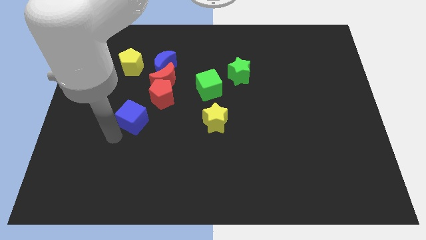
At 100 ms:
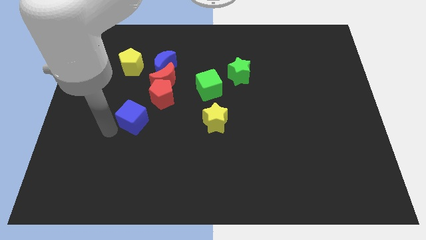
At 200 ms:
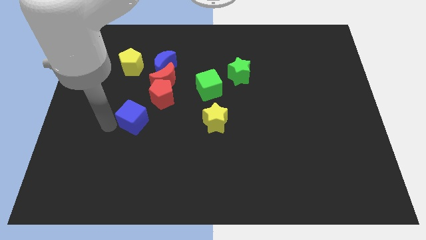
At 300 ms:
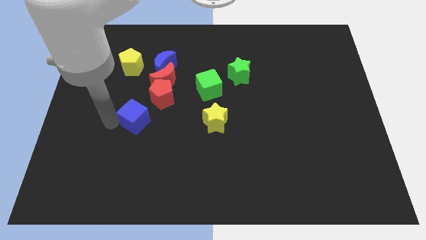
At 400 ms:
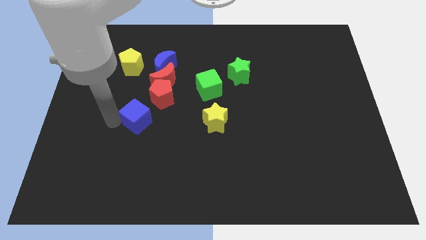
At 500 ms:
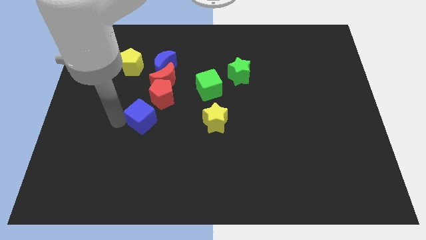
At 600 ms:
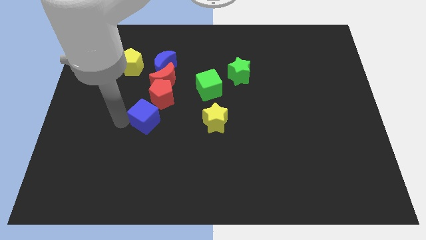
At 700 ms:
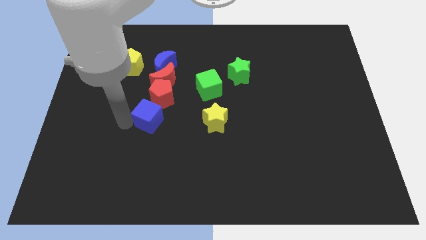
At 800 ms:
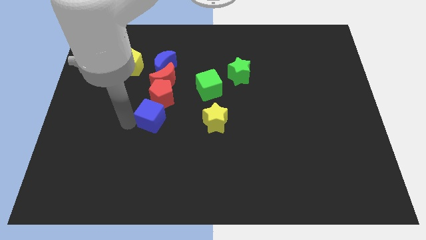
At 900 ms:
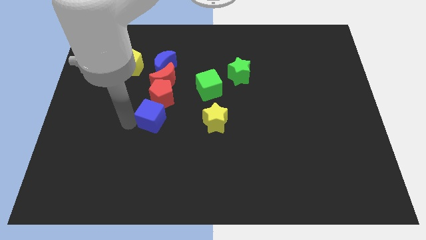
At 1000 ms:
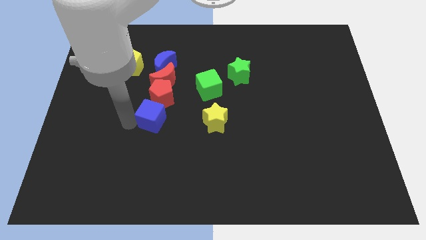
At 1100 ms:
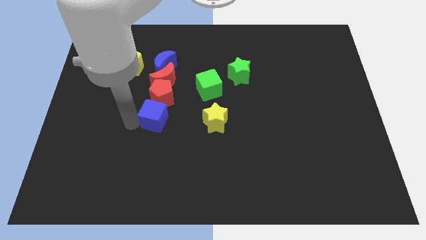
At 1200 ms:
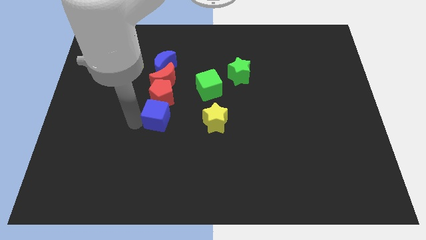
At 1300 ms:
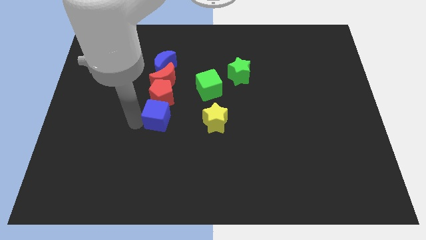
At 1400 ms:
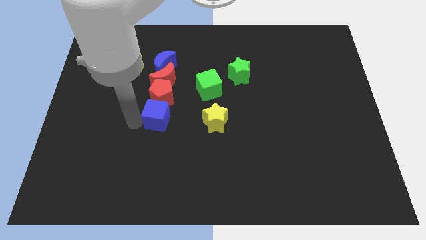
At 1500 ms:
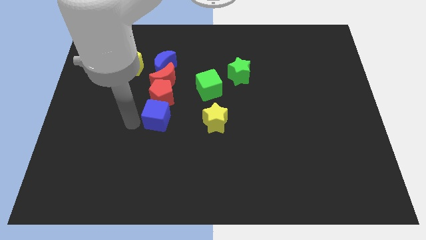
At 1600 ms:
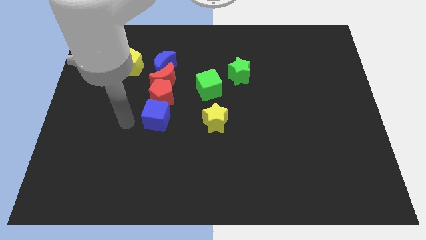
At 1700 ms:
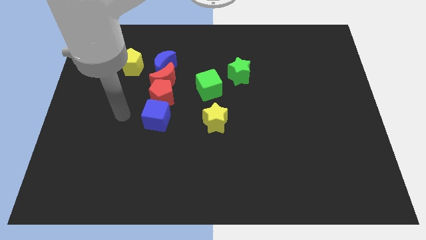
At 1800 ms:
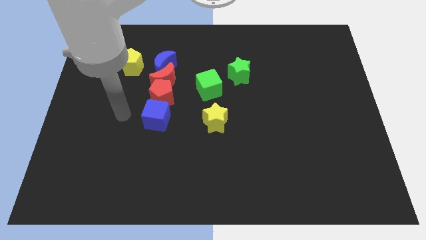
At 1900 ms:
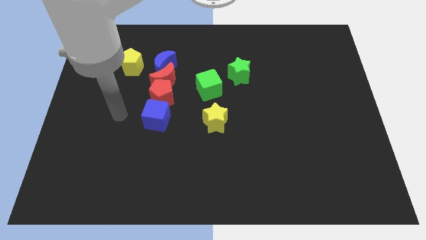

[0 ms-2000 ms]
place the blue cube to bottom of red pentagon

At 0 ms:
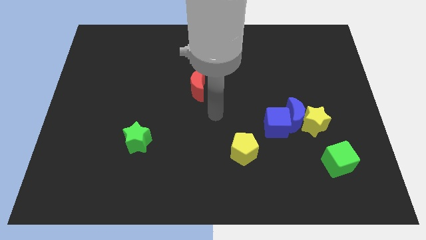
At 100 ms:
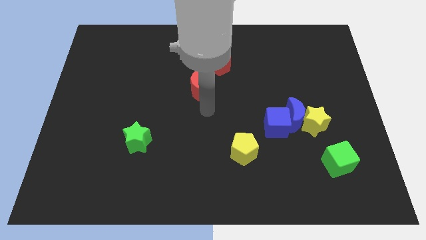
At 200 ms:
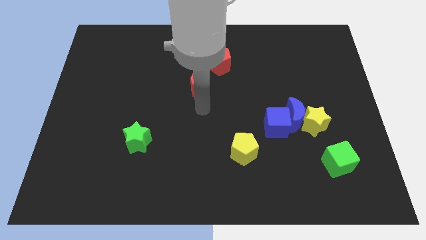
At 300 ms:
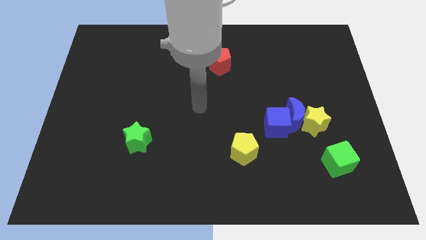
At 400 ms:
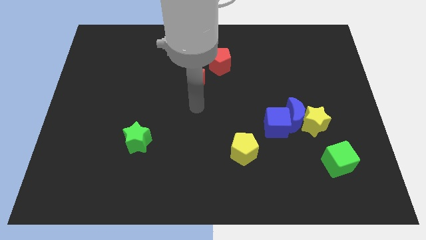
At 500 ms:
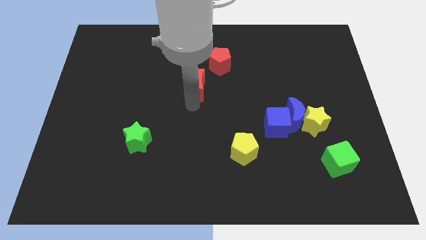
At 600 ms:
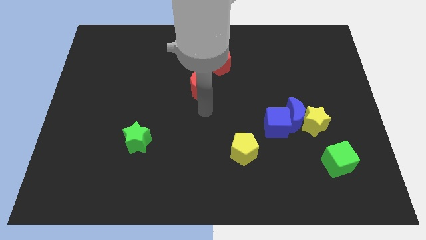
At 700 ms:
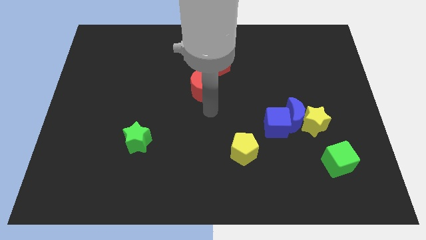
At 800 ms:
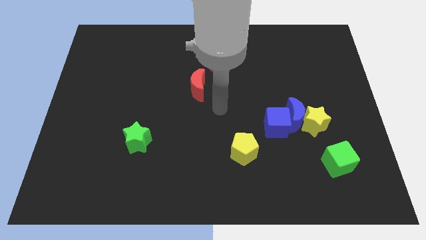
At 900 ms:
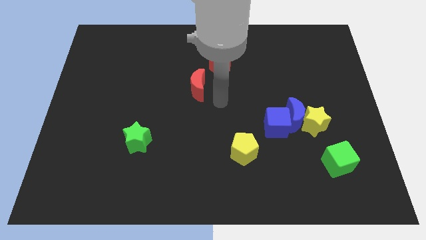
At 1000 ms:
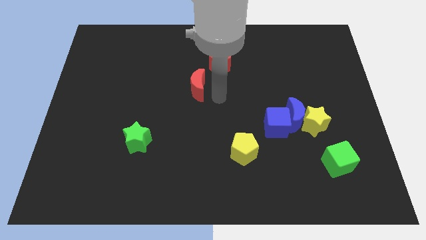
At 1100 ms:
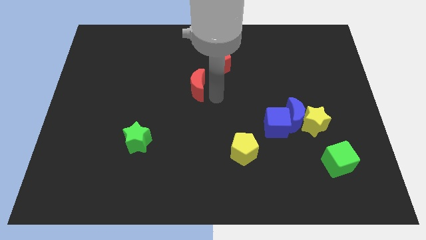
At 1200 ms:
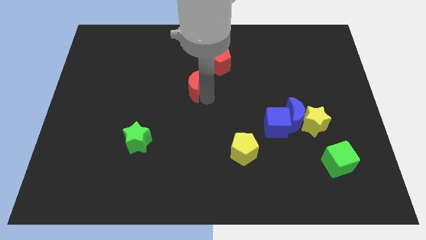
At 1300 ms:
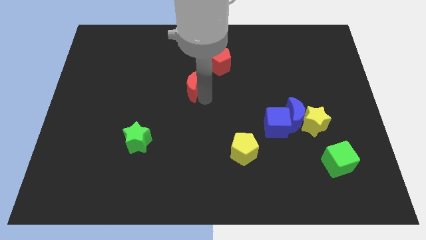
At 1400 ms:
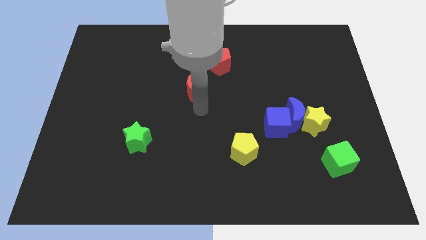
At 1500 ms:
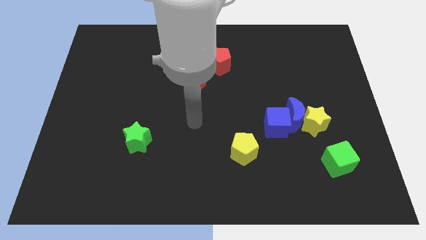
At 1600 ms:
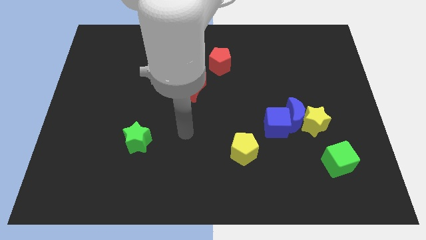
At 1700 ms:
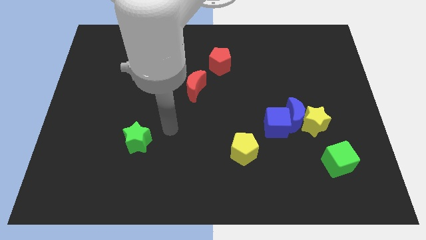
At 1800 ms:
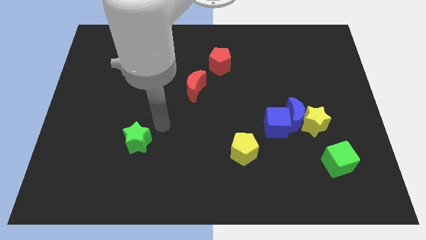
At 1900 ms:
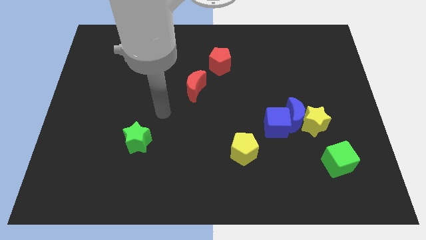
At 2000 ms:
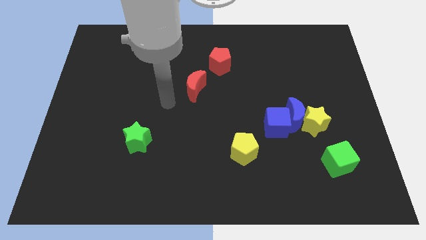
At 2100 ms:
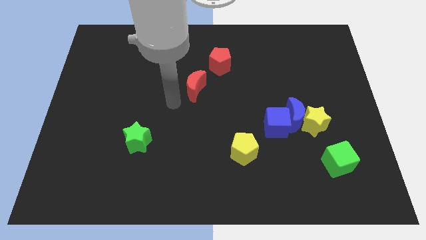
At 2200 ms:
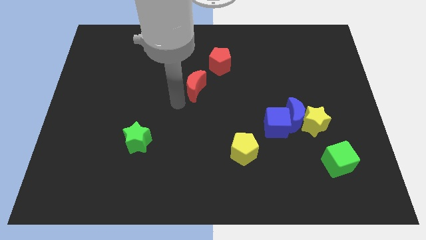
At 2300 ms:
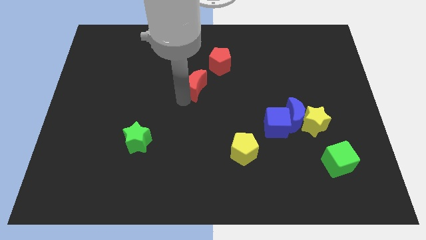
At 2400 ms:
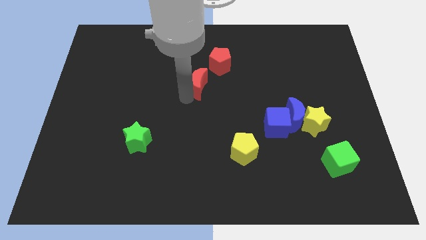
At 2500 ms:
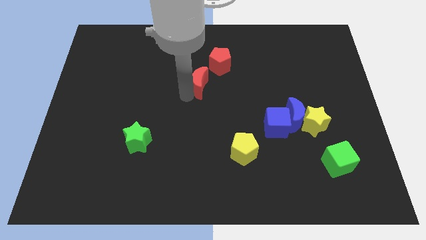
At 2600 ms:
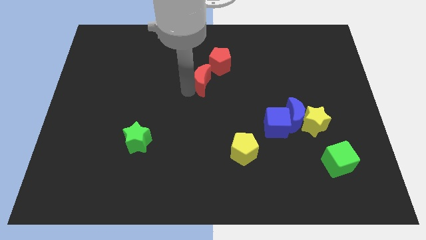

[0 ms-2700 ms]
push the red moon close to the red pentagon

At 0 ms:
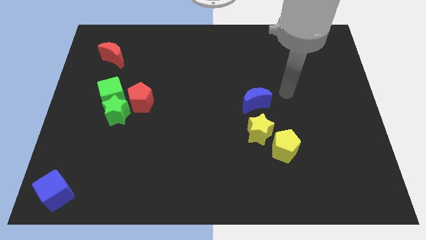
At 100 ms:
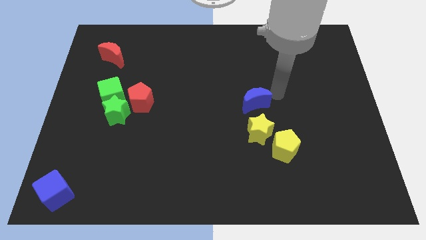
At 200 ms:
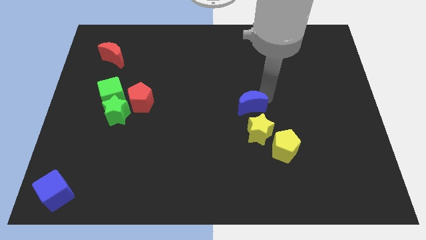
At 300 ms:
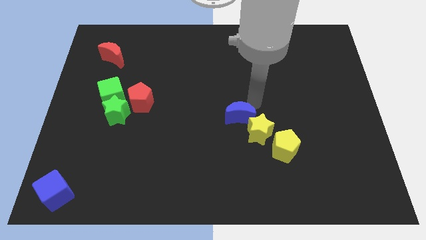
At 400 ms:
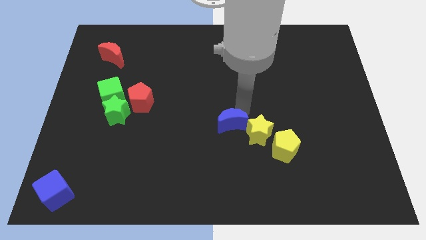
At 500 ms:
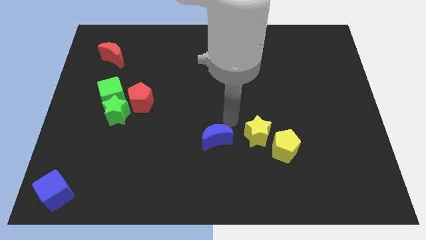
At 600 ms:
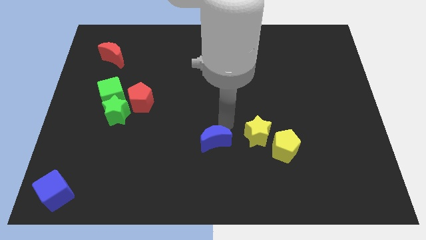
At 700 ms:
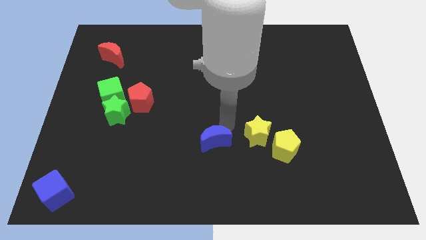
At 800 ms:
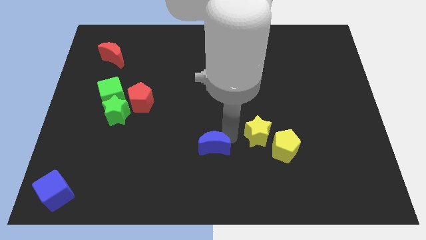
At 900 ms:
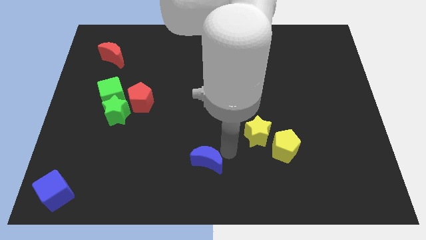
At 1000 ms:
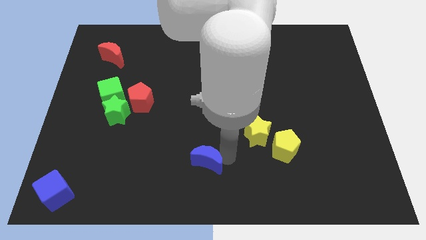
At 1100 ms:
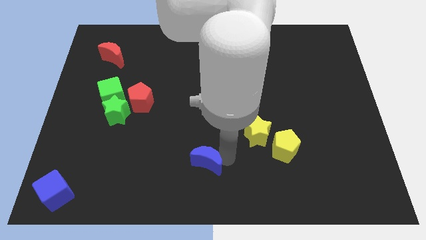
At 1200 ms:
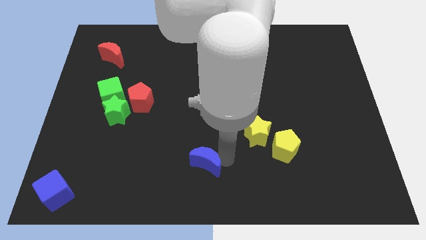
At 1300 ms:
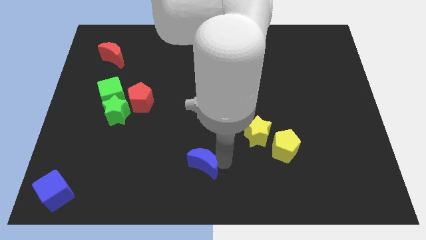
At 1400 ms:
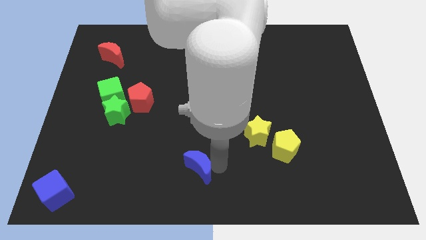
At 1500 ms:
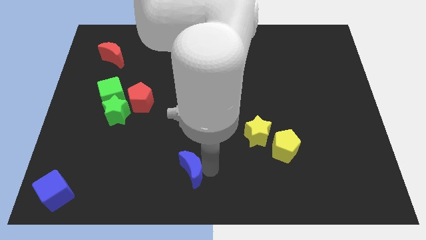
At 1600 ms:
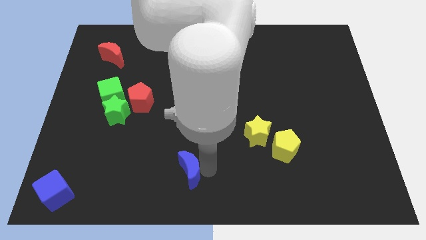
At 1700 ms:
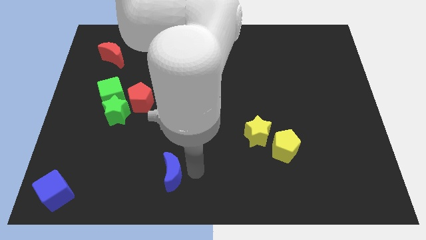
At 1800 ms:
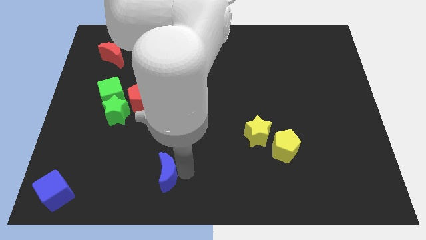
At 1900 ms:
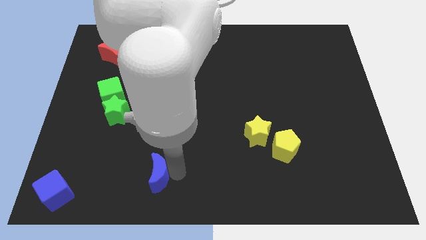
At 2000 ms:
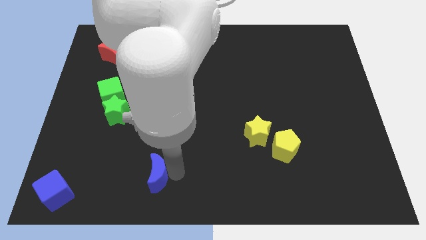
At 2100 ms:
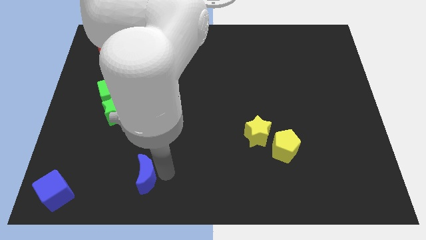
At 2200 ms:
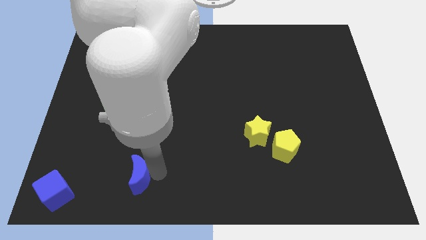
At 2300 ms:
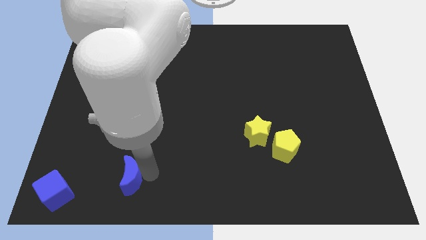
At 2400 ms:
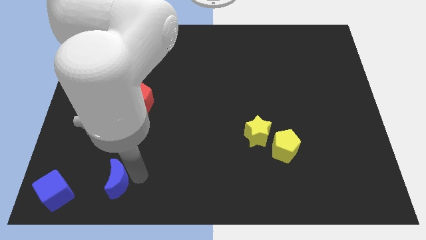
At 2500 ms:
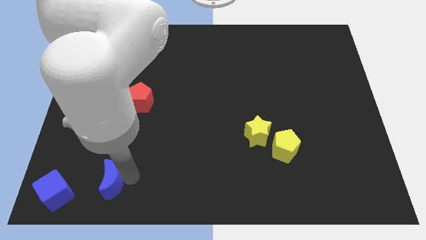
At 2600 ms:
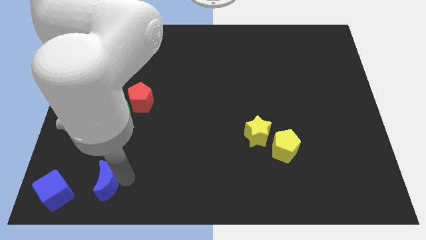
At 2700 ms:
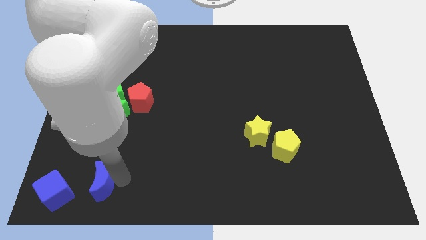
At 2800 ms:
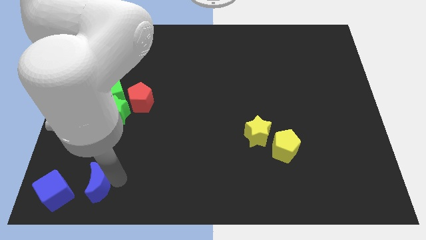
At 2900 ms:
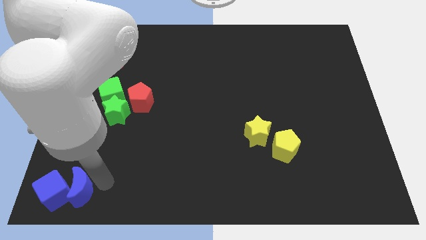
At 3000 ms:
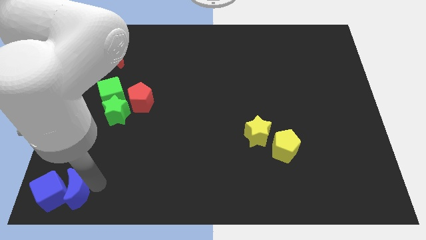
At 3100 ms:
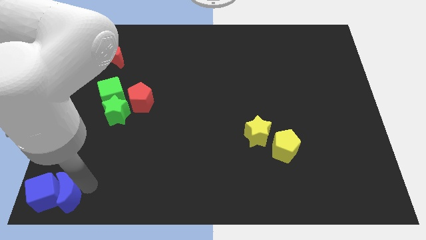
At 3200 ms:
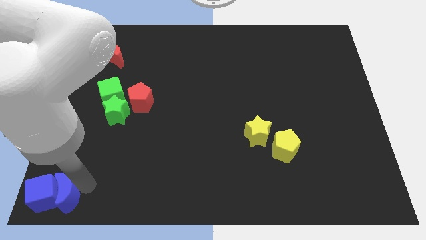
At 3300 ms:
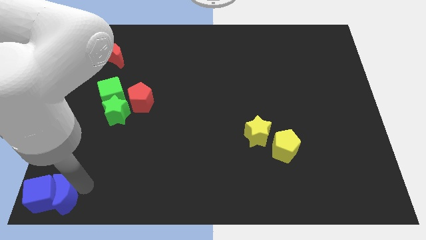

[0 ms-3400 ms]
push the blue moon into the right side of the blue cube

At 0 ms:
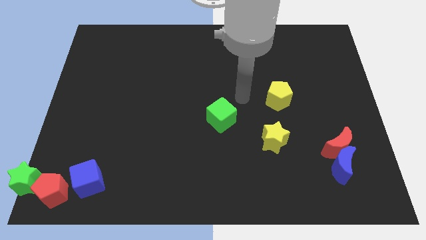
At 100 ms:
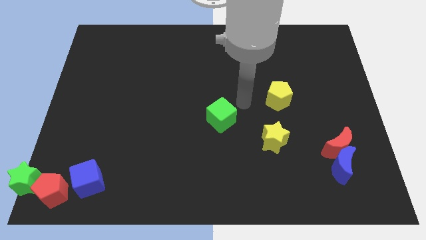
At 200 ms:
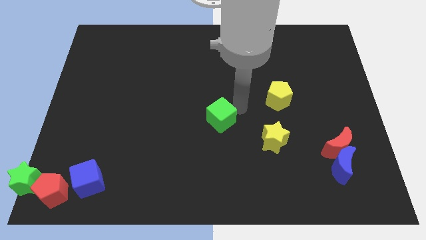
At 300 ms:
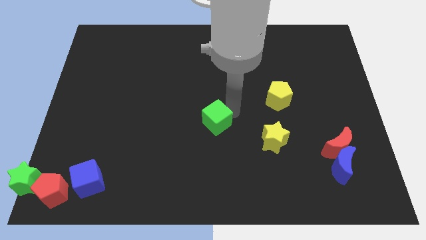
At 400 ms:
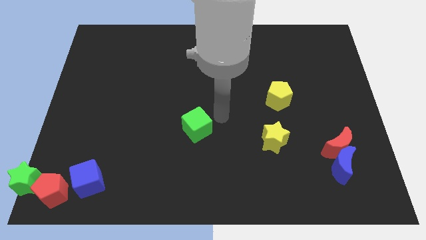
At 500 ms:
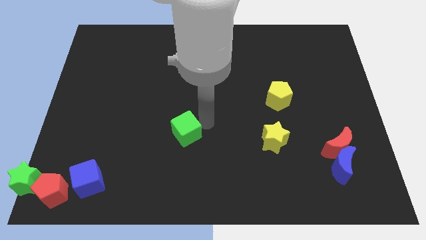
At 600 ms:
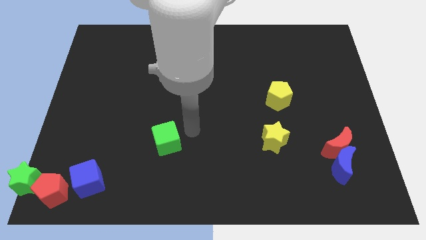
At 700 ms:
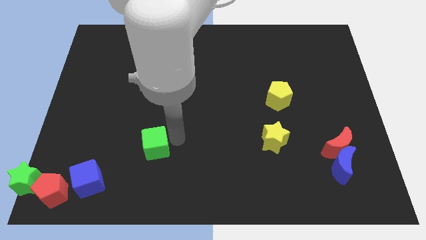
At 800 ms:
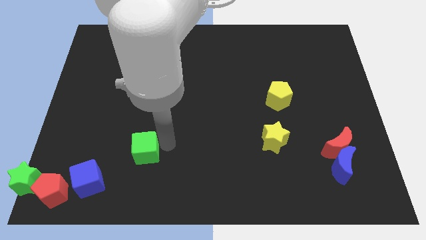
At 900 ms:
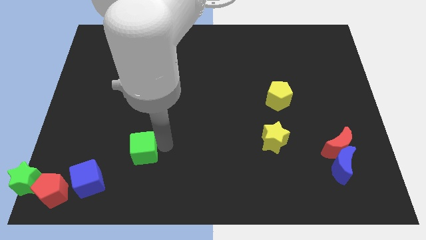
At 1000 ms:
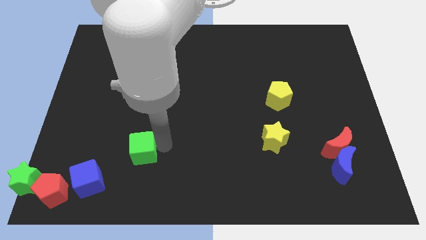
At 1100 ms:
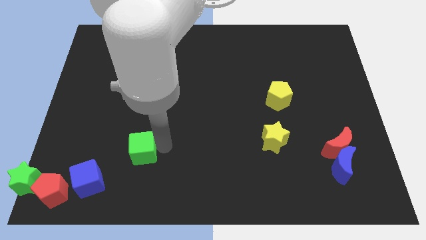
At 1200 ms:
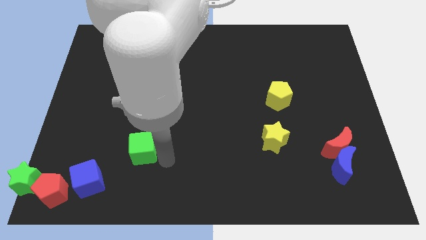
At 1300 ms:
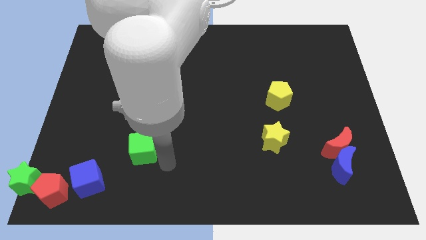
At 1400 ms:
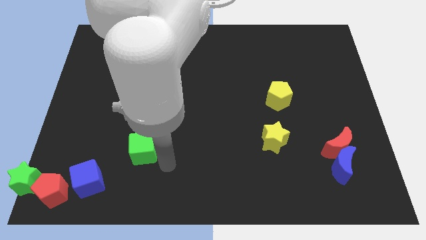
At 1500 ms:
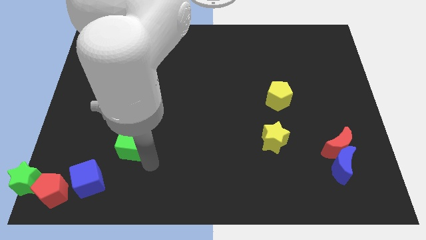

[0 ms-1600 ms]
place the green cube diagonally on the top right side of the blue cube
